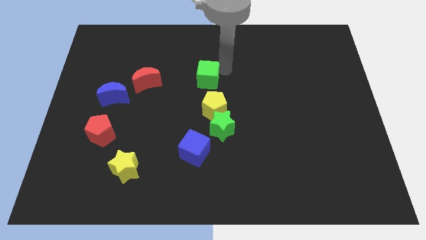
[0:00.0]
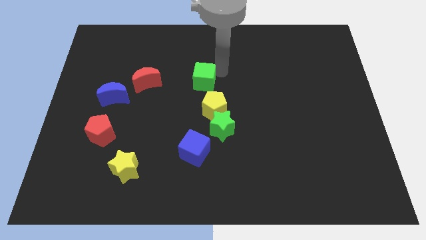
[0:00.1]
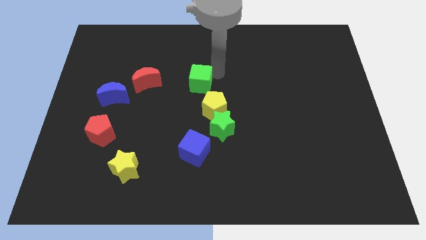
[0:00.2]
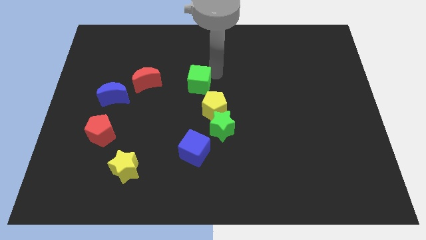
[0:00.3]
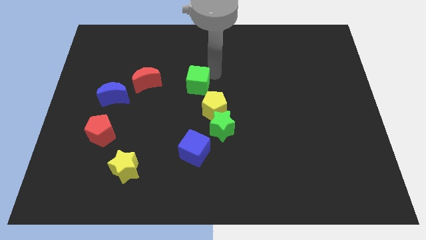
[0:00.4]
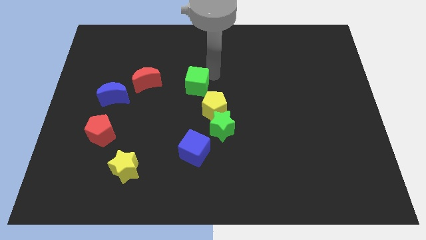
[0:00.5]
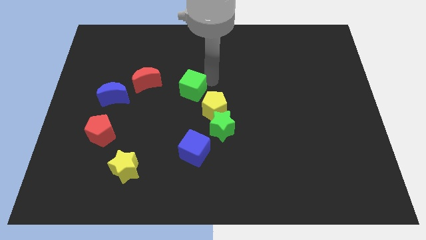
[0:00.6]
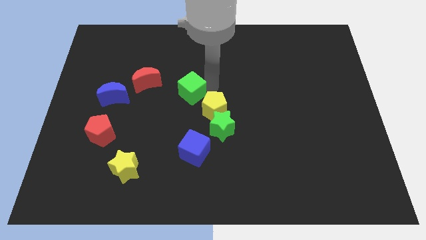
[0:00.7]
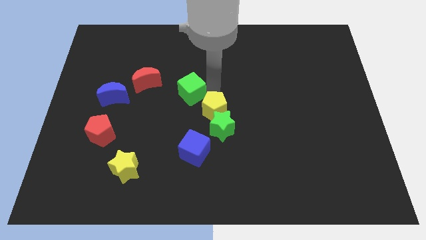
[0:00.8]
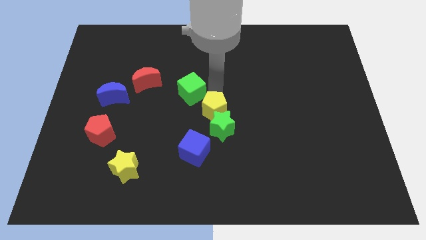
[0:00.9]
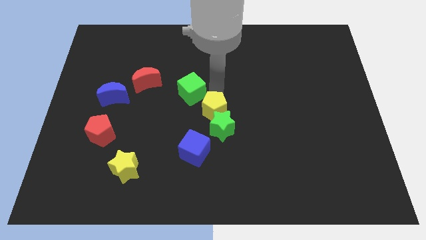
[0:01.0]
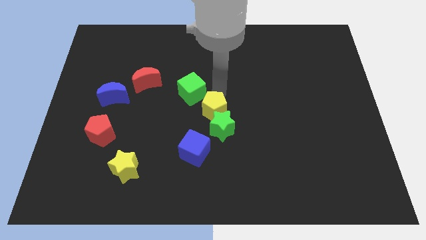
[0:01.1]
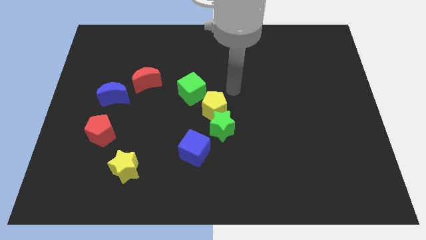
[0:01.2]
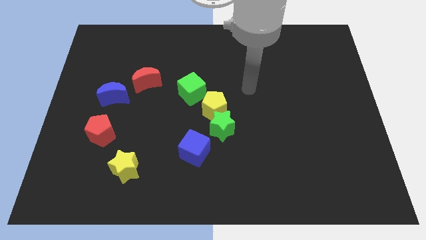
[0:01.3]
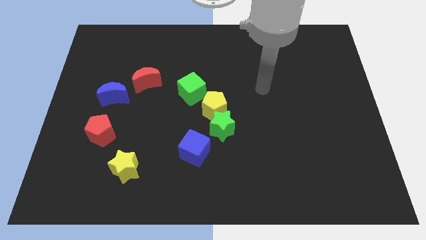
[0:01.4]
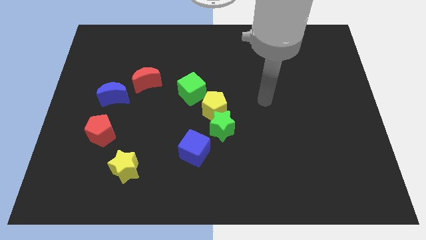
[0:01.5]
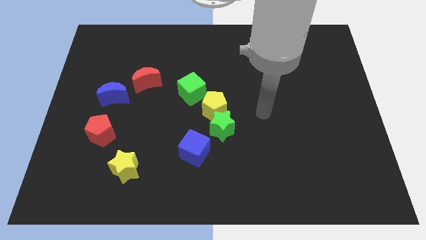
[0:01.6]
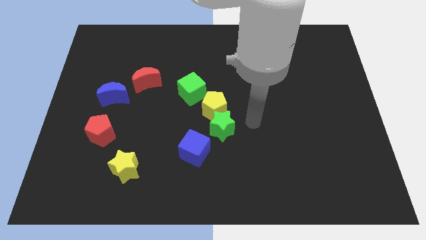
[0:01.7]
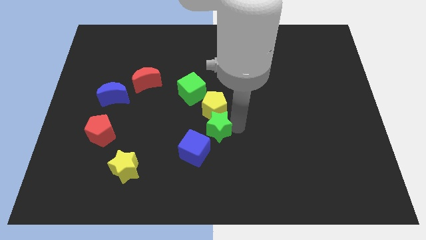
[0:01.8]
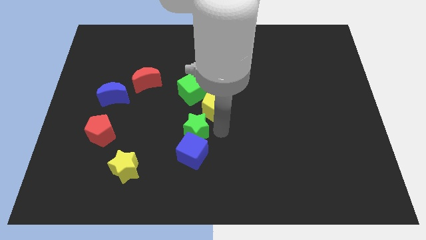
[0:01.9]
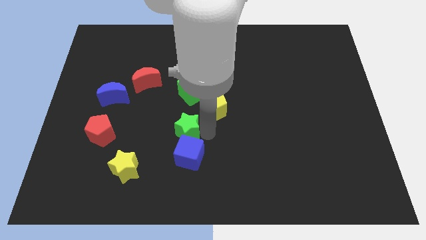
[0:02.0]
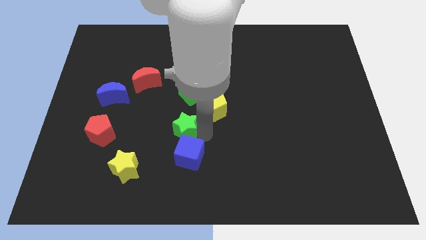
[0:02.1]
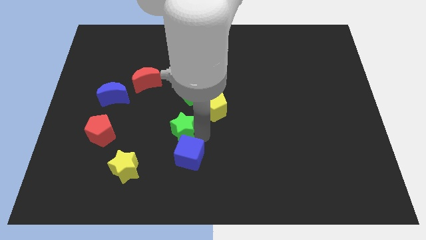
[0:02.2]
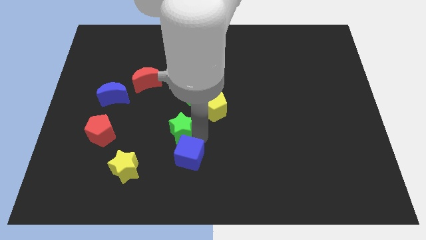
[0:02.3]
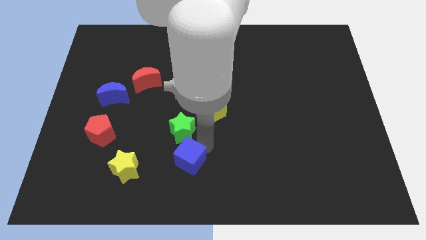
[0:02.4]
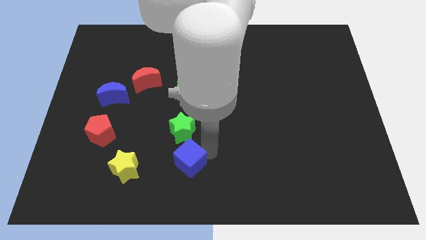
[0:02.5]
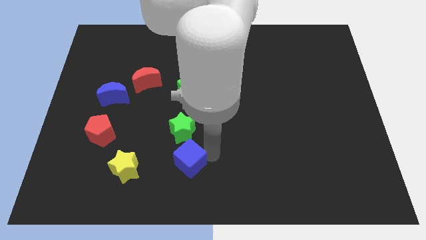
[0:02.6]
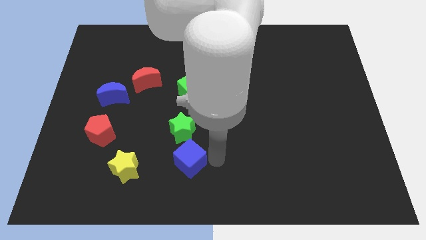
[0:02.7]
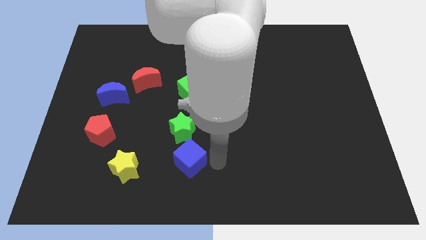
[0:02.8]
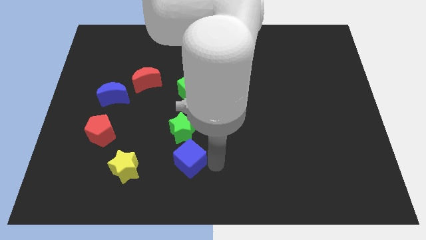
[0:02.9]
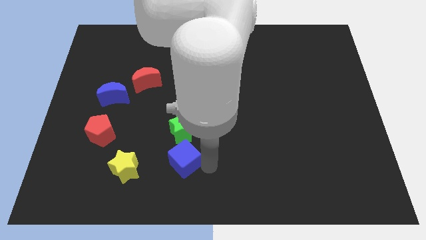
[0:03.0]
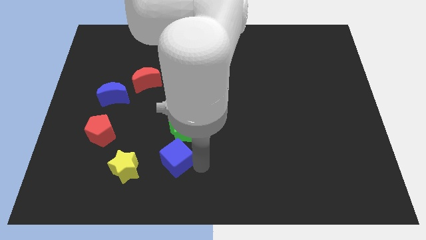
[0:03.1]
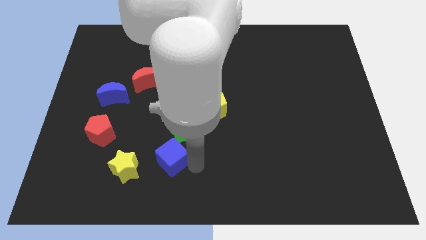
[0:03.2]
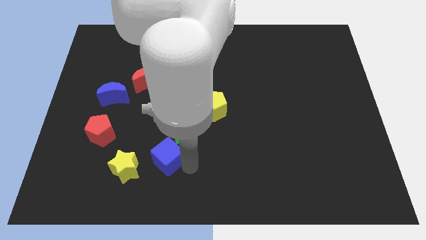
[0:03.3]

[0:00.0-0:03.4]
drag the green star and blue cube diagonally to red moon

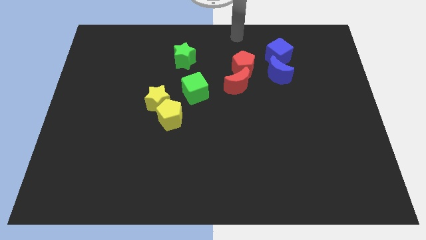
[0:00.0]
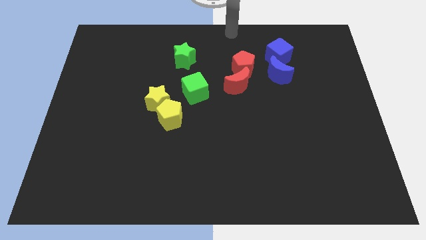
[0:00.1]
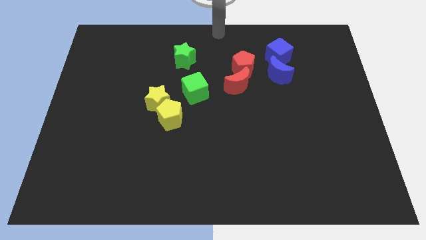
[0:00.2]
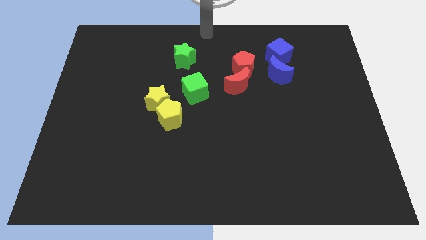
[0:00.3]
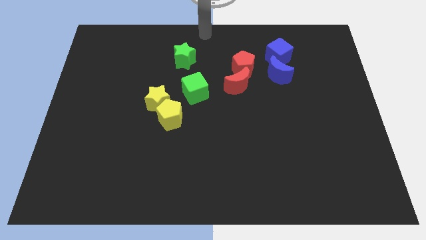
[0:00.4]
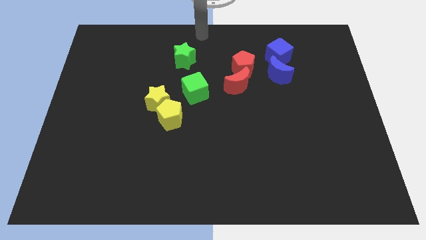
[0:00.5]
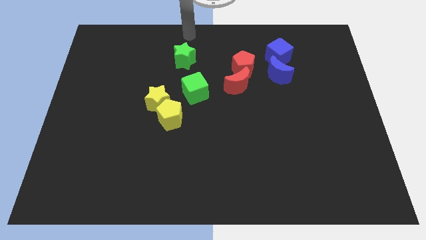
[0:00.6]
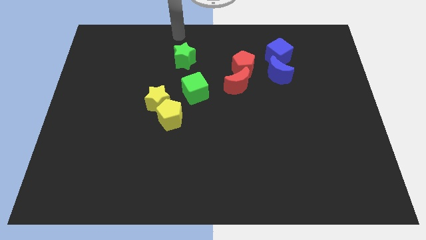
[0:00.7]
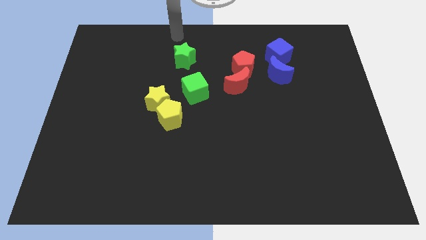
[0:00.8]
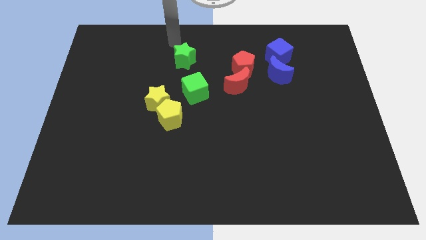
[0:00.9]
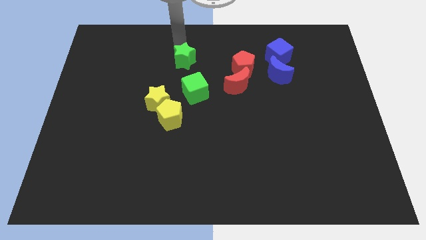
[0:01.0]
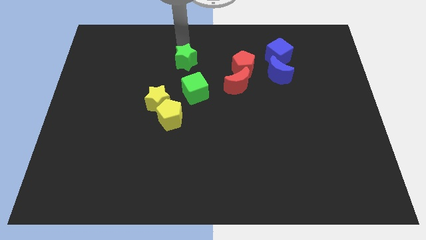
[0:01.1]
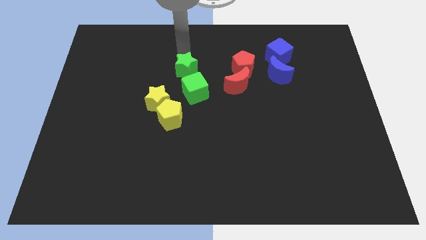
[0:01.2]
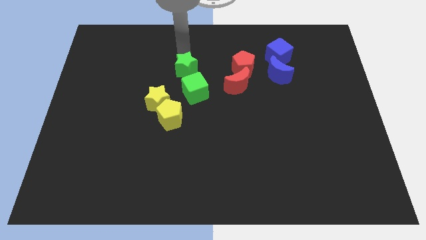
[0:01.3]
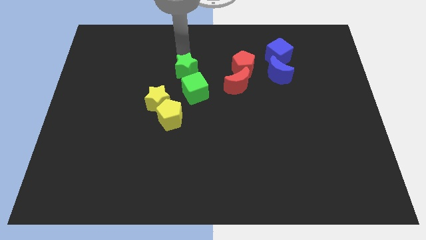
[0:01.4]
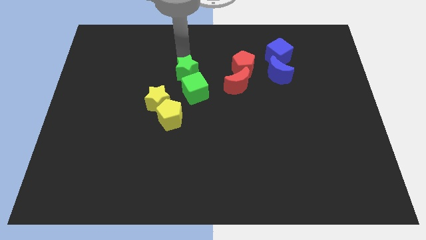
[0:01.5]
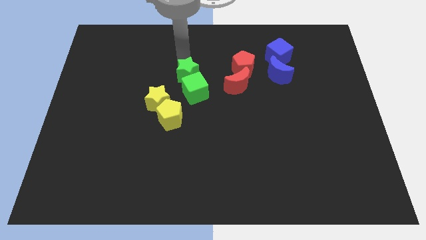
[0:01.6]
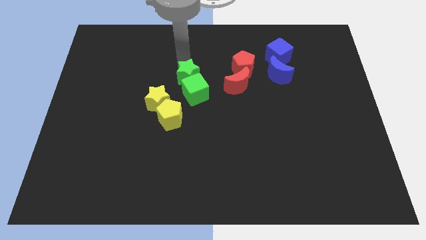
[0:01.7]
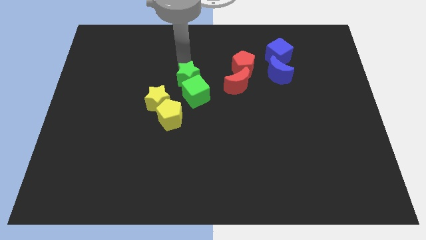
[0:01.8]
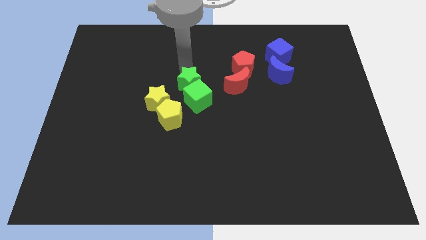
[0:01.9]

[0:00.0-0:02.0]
push the green star into the green cube

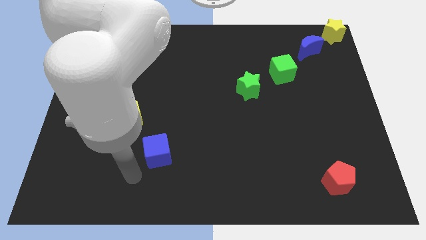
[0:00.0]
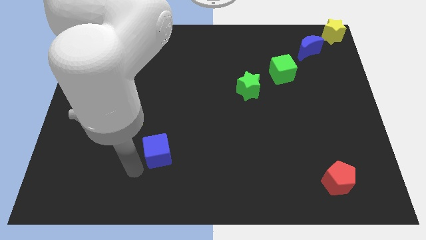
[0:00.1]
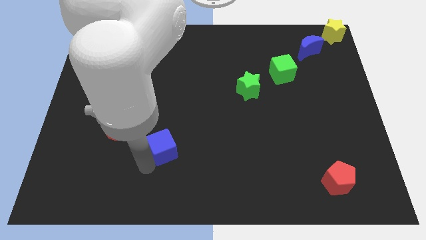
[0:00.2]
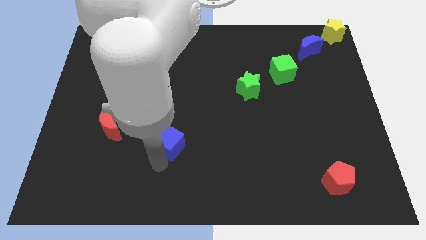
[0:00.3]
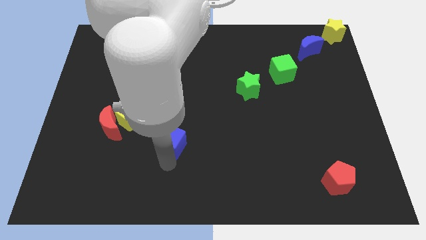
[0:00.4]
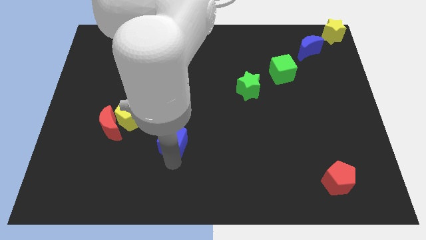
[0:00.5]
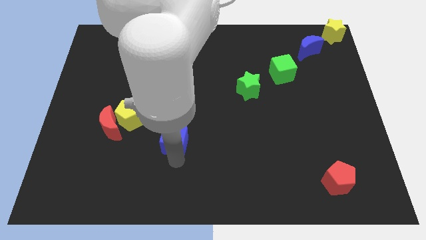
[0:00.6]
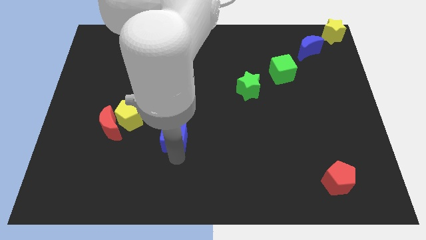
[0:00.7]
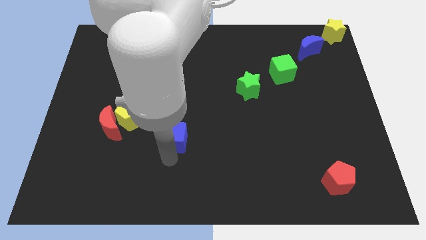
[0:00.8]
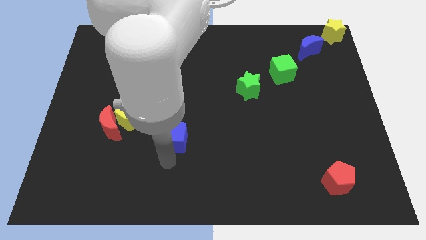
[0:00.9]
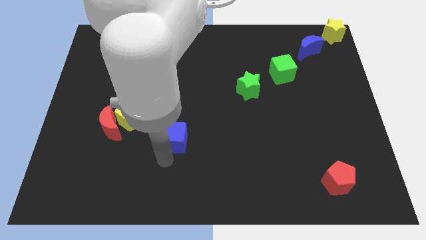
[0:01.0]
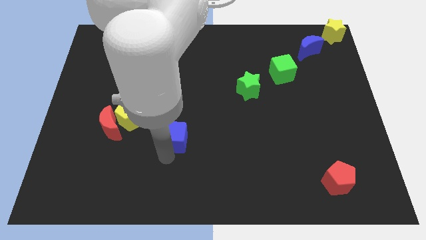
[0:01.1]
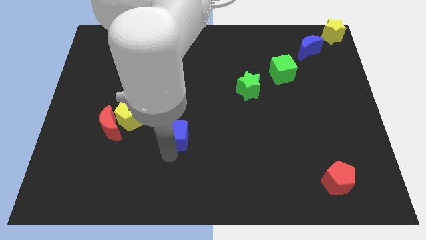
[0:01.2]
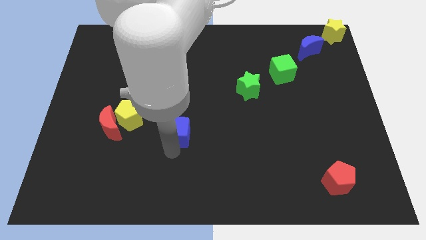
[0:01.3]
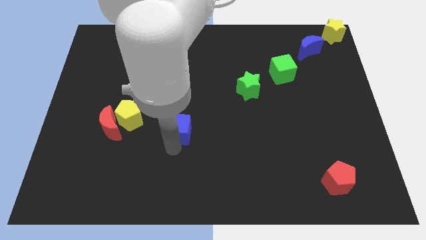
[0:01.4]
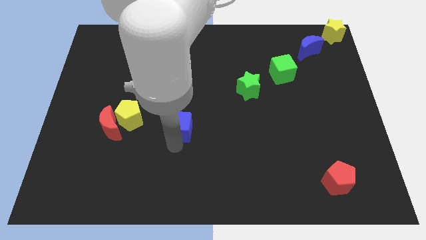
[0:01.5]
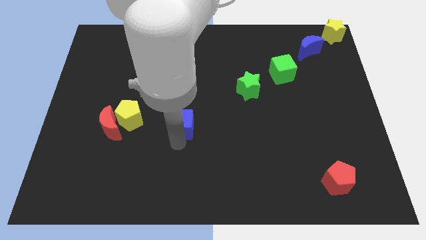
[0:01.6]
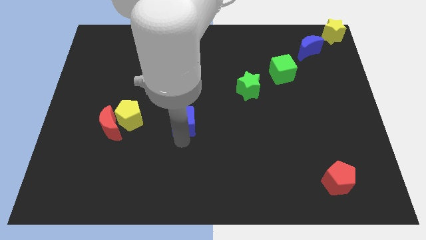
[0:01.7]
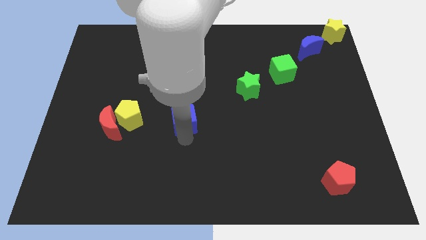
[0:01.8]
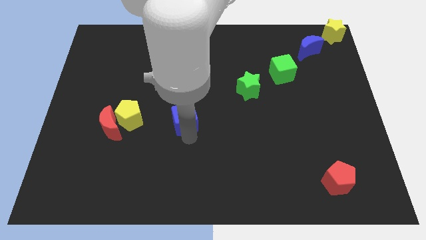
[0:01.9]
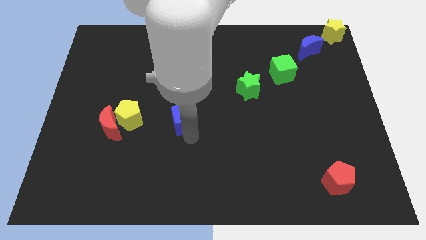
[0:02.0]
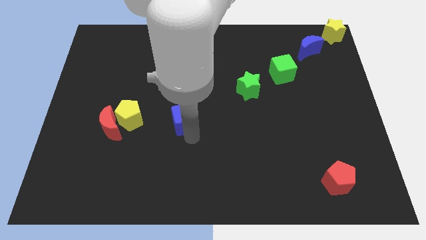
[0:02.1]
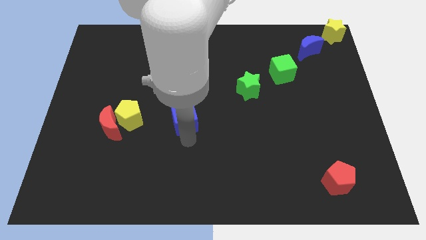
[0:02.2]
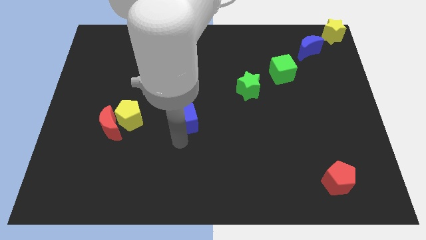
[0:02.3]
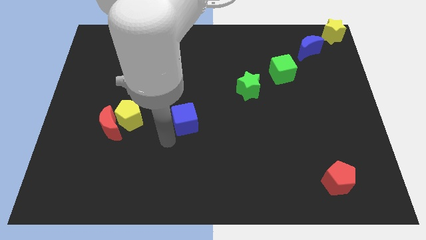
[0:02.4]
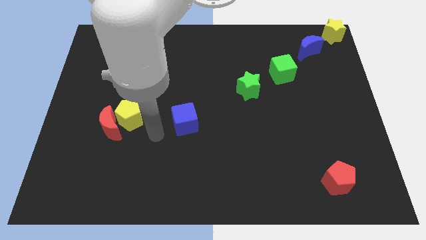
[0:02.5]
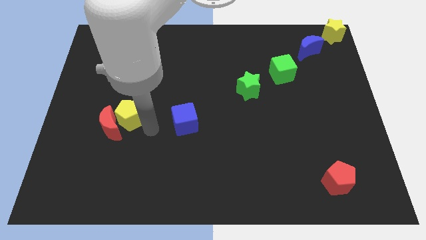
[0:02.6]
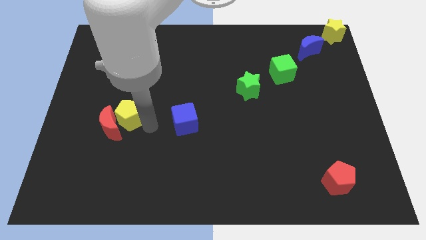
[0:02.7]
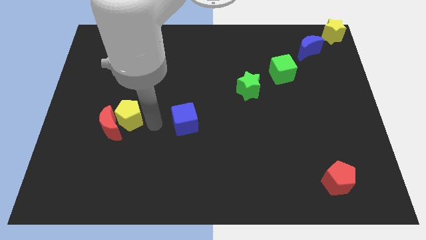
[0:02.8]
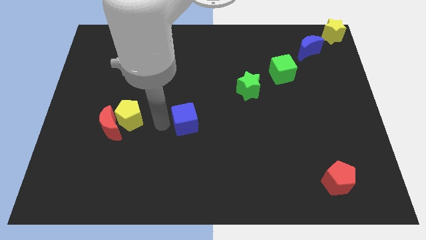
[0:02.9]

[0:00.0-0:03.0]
push the blue cube parallel to yellow pentagon

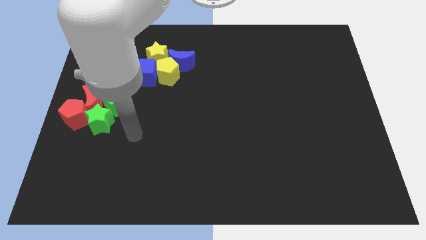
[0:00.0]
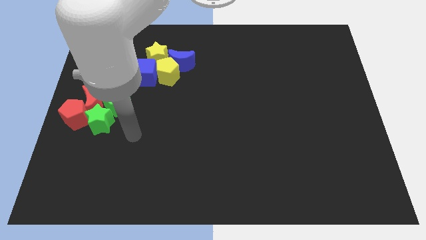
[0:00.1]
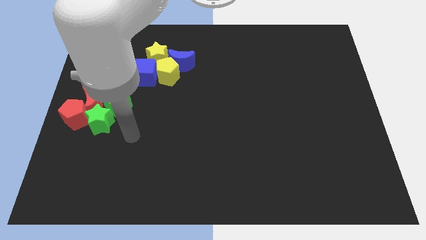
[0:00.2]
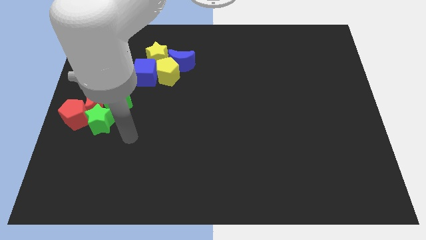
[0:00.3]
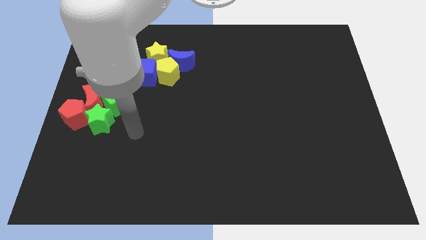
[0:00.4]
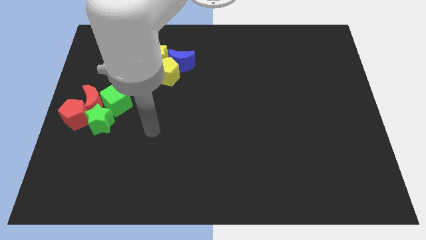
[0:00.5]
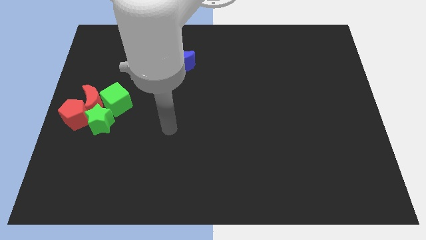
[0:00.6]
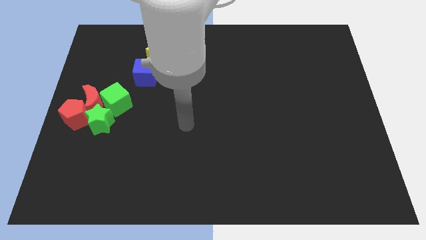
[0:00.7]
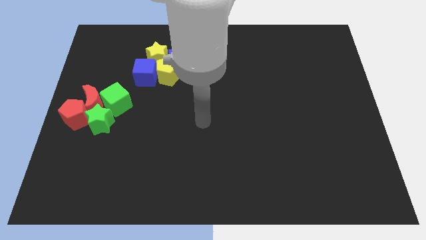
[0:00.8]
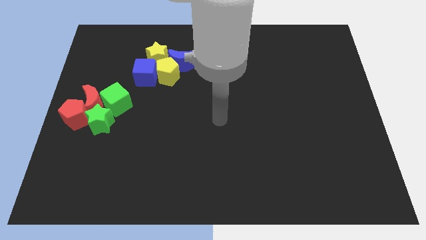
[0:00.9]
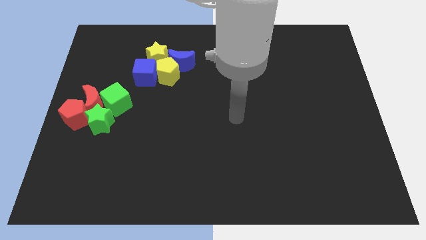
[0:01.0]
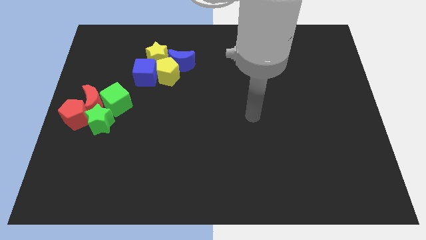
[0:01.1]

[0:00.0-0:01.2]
move the arm to the center of the board
